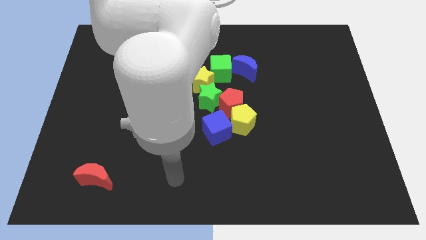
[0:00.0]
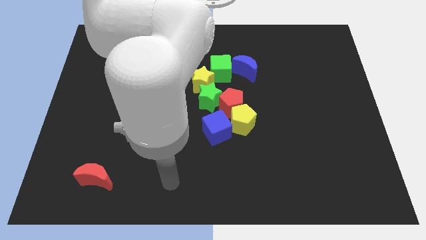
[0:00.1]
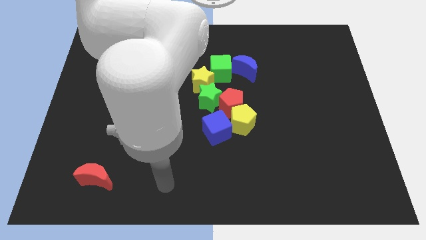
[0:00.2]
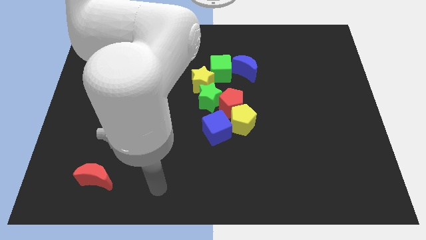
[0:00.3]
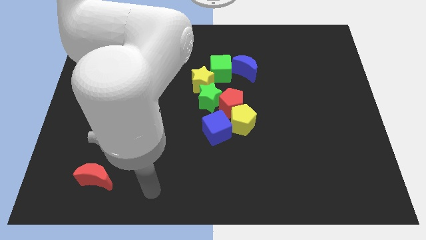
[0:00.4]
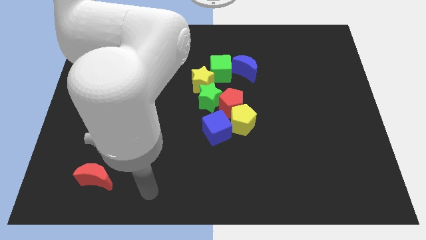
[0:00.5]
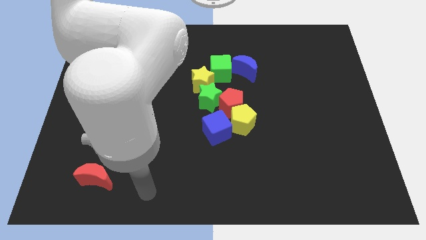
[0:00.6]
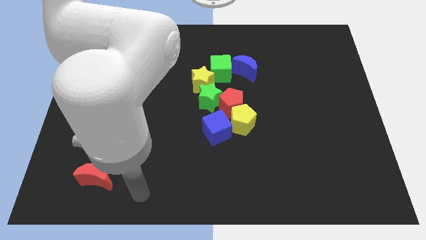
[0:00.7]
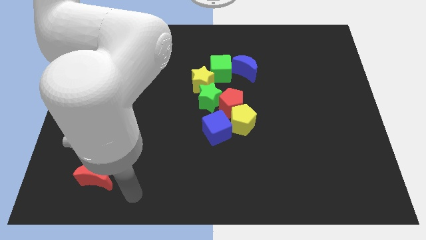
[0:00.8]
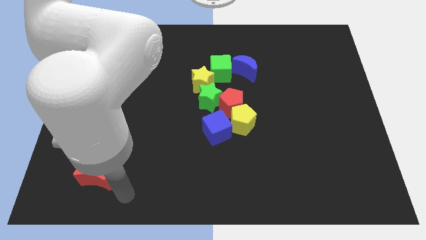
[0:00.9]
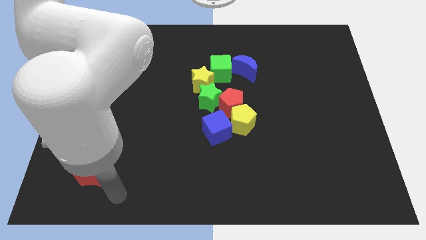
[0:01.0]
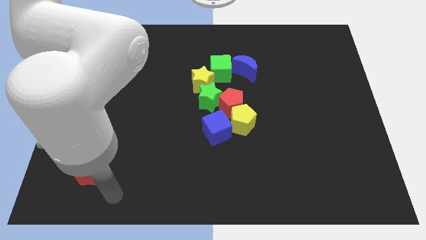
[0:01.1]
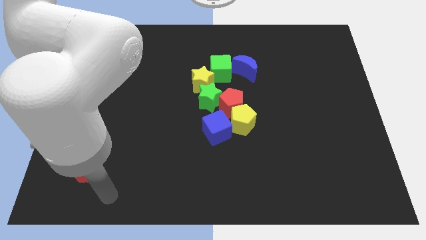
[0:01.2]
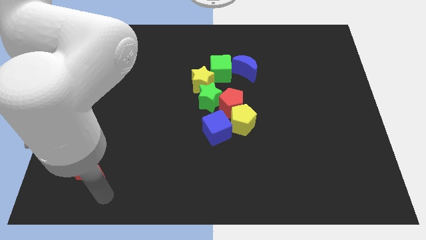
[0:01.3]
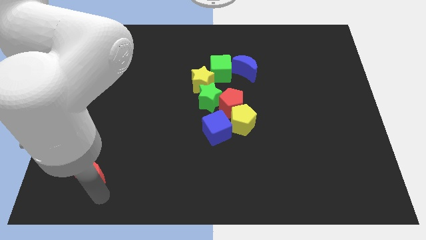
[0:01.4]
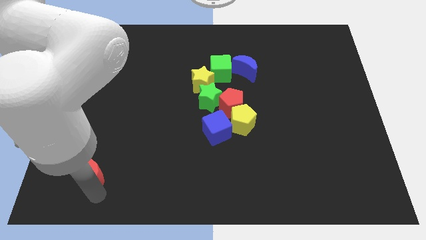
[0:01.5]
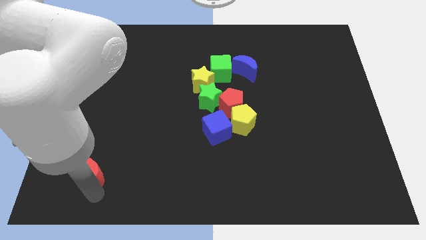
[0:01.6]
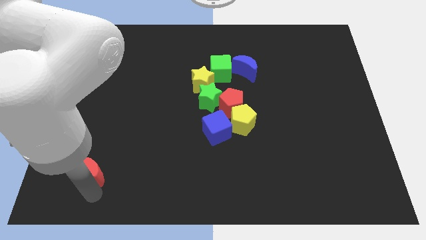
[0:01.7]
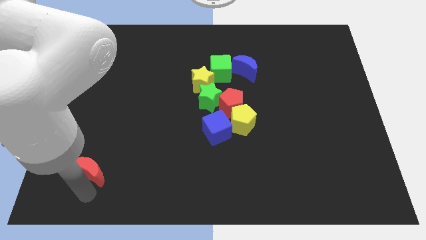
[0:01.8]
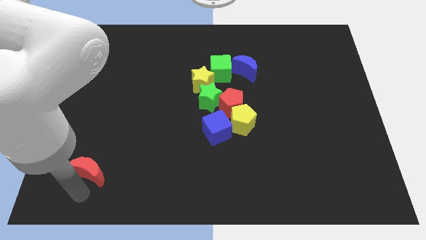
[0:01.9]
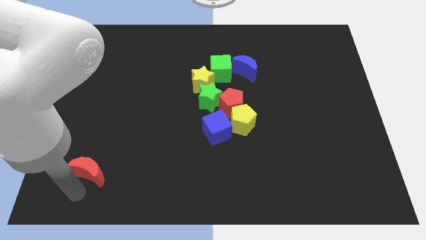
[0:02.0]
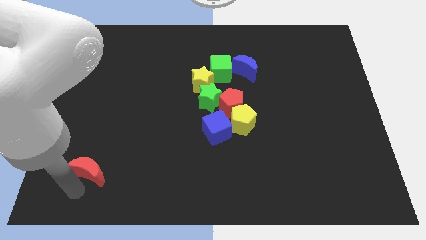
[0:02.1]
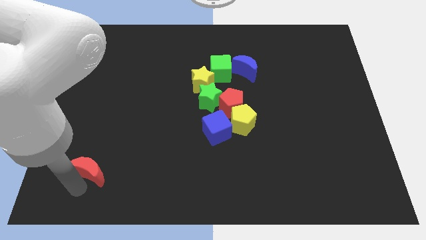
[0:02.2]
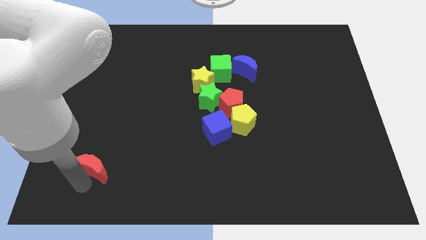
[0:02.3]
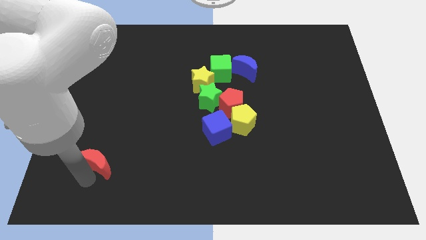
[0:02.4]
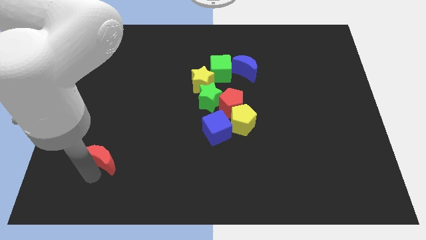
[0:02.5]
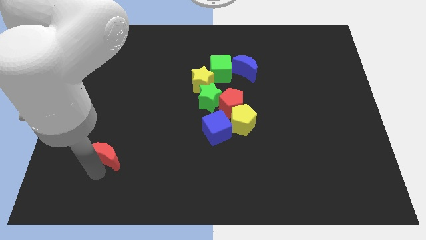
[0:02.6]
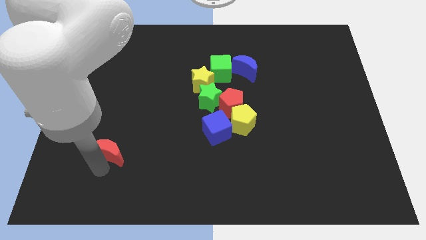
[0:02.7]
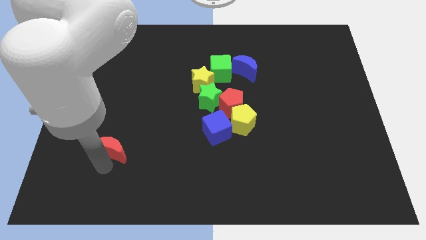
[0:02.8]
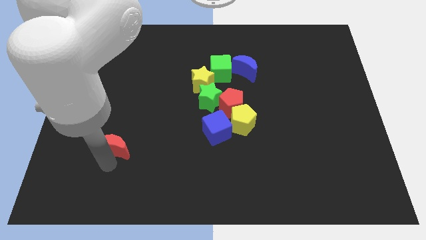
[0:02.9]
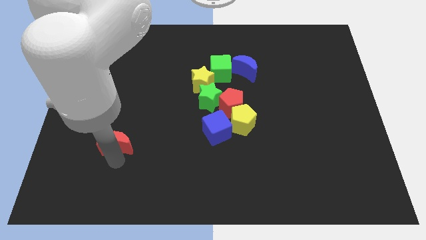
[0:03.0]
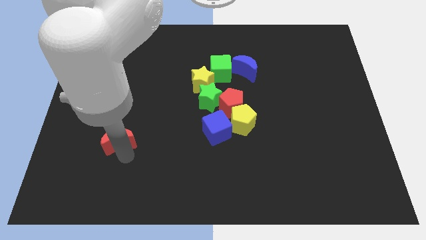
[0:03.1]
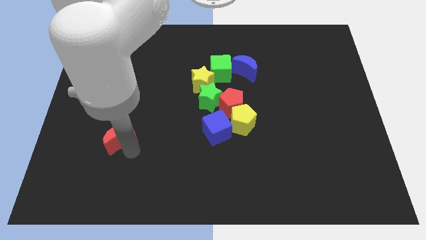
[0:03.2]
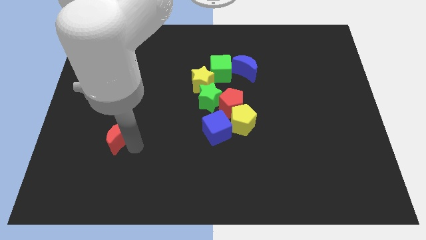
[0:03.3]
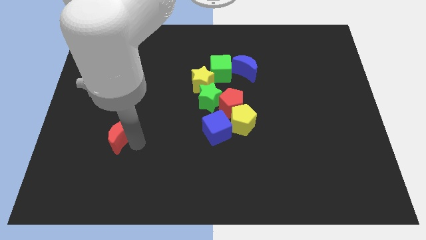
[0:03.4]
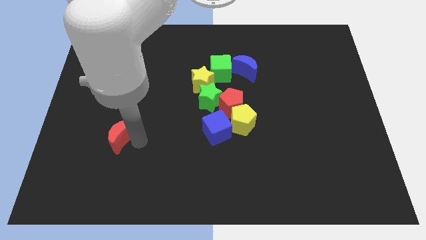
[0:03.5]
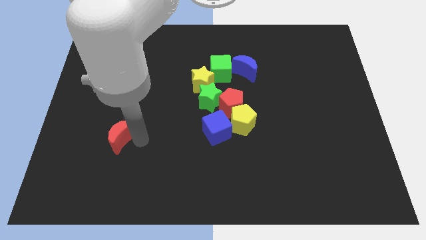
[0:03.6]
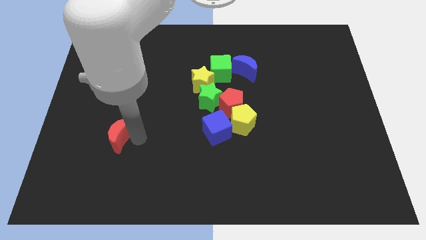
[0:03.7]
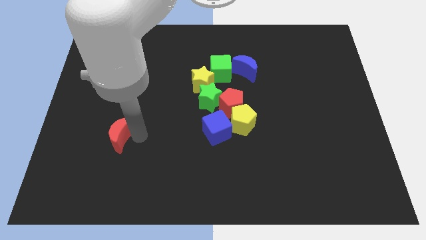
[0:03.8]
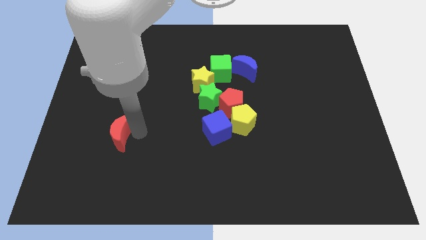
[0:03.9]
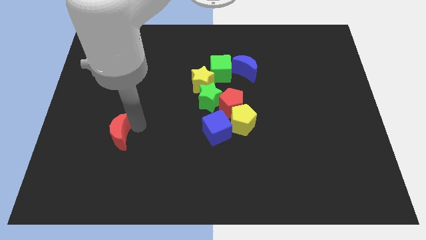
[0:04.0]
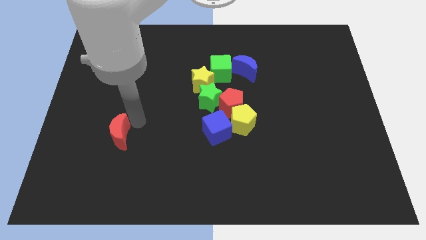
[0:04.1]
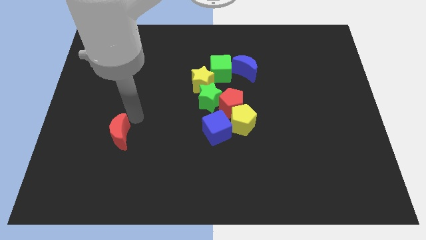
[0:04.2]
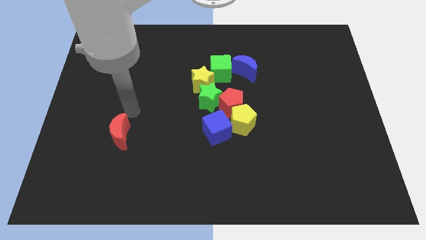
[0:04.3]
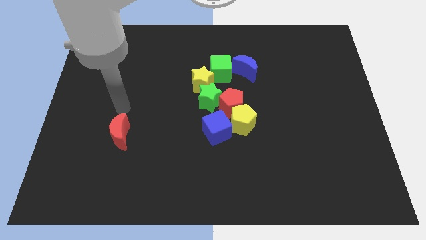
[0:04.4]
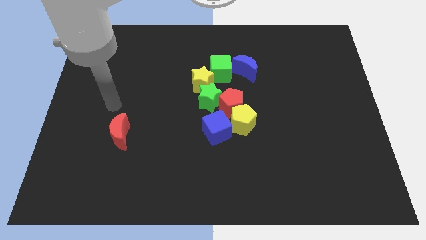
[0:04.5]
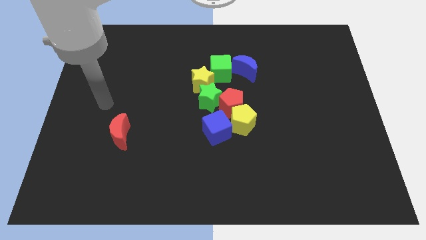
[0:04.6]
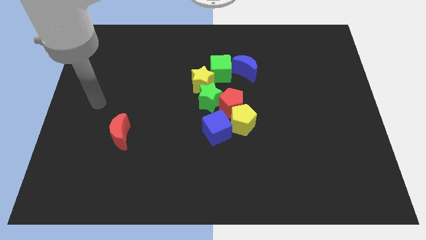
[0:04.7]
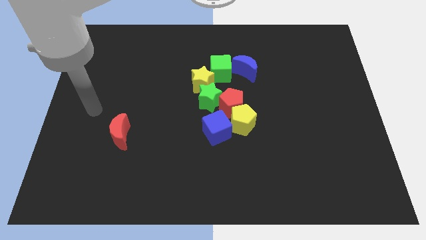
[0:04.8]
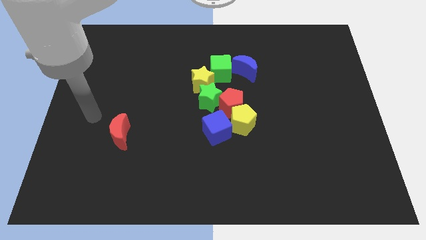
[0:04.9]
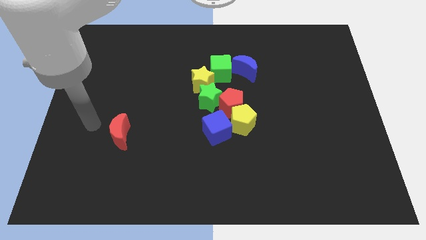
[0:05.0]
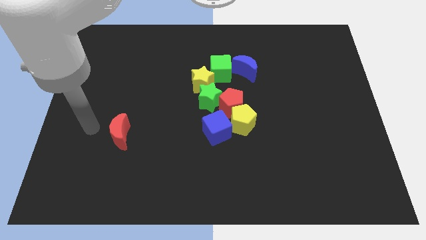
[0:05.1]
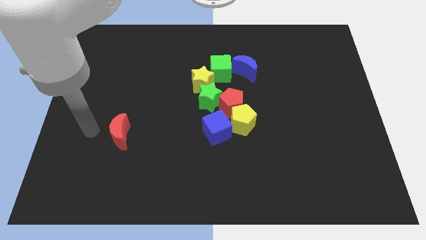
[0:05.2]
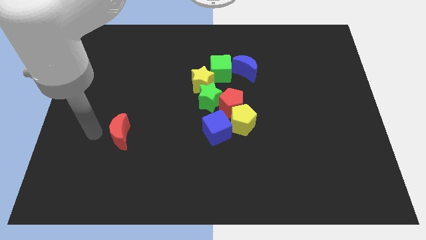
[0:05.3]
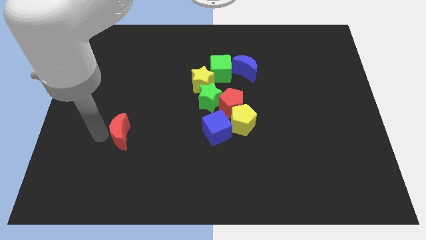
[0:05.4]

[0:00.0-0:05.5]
move the red crescent towards the left side of the blue cube

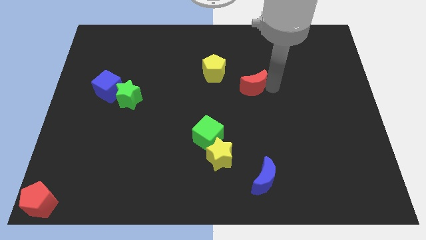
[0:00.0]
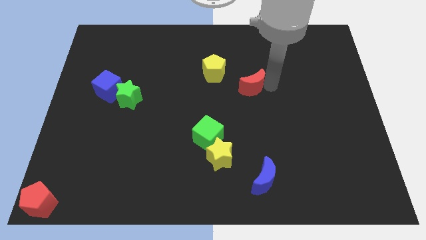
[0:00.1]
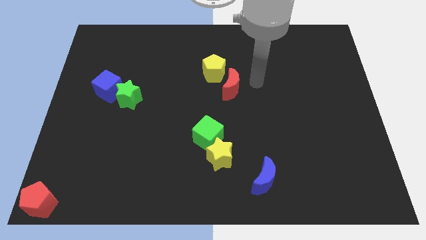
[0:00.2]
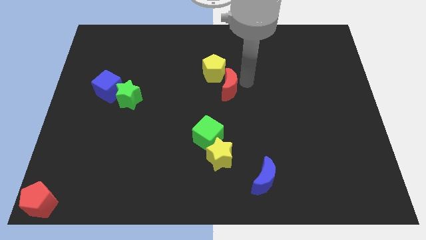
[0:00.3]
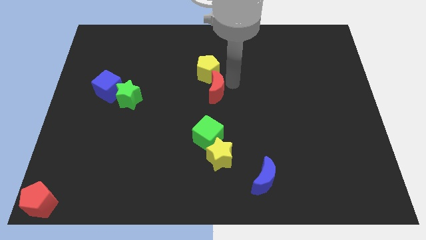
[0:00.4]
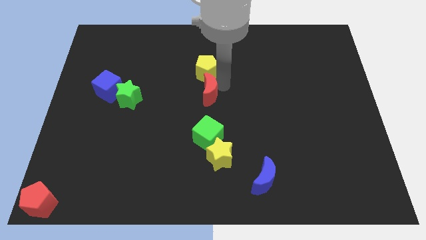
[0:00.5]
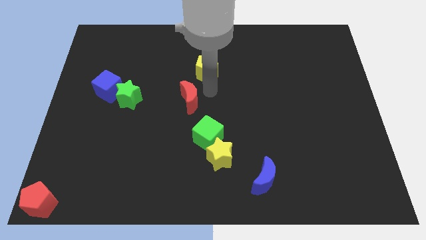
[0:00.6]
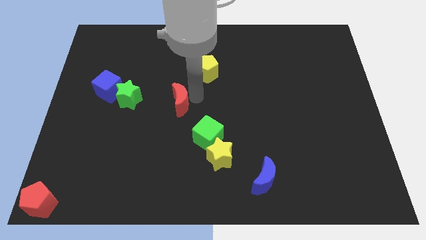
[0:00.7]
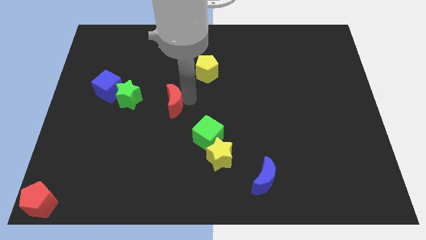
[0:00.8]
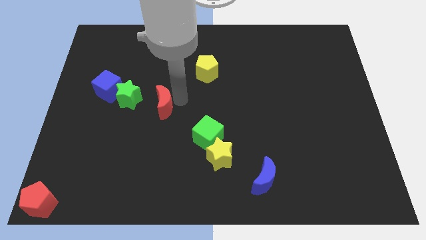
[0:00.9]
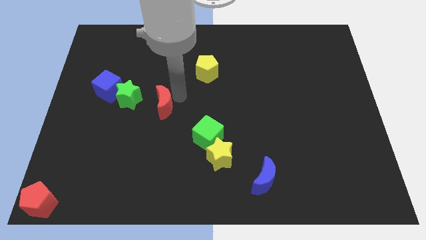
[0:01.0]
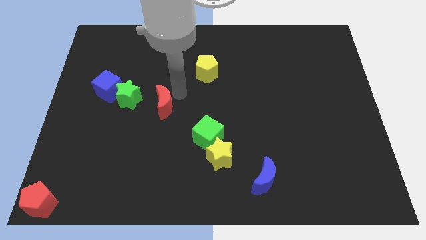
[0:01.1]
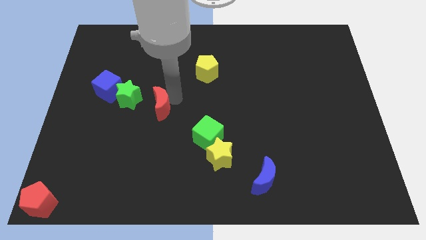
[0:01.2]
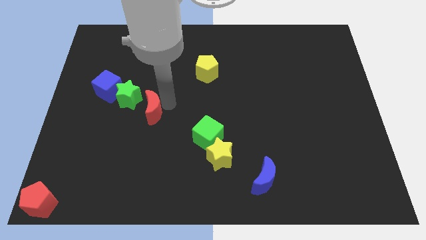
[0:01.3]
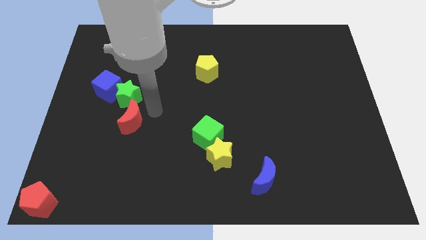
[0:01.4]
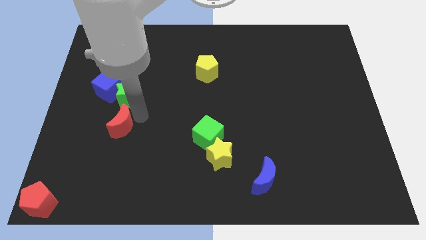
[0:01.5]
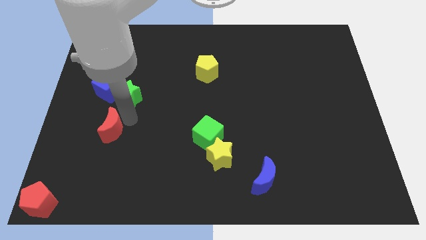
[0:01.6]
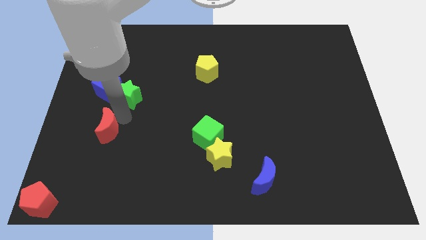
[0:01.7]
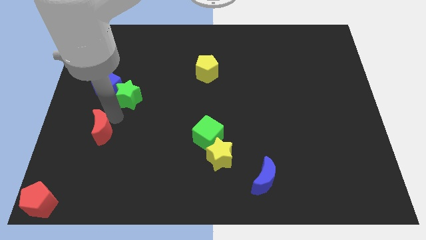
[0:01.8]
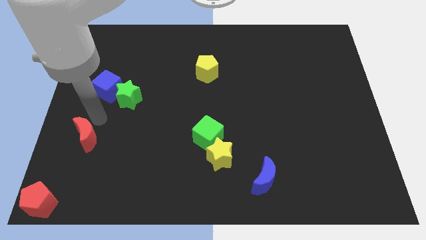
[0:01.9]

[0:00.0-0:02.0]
drag the red crescent towards the left center

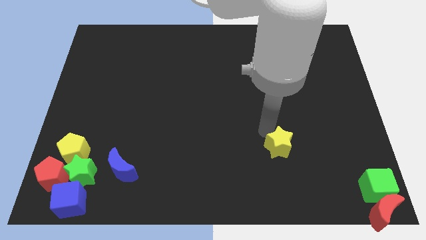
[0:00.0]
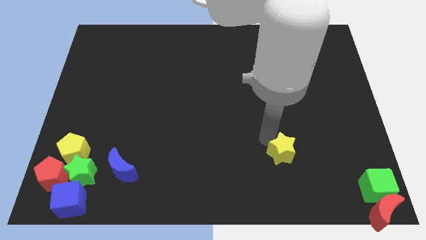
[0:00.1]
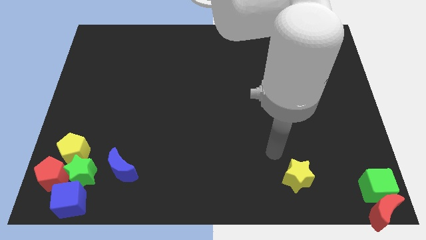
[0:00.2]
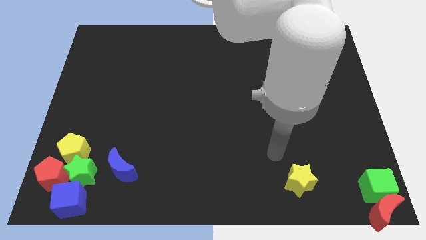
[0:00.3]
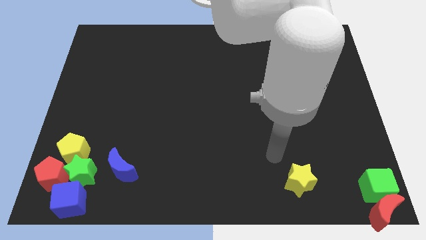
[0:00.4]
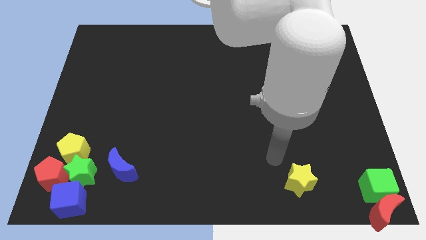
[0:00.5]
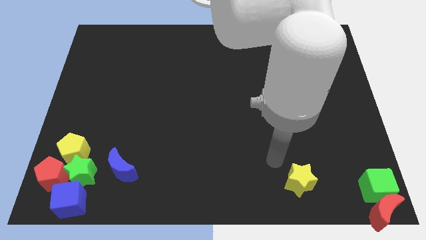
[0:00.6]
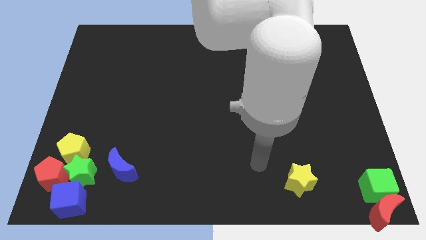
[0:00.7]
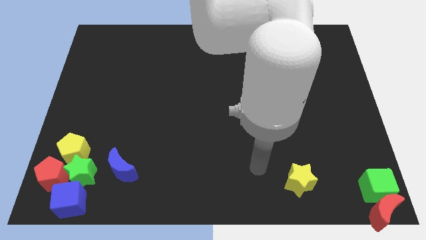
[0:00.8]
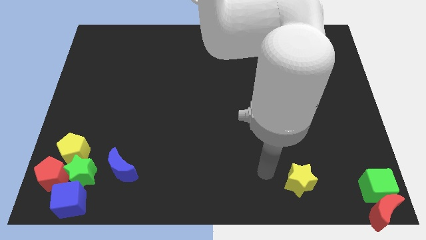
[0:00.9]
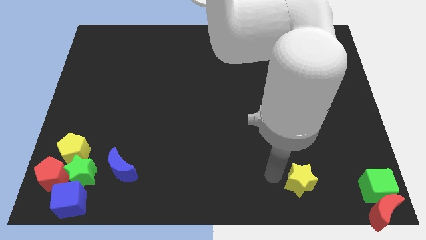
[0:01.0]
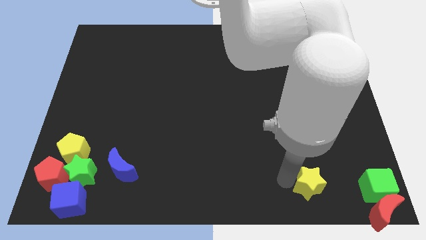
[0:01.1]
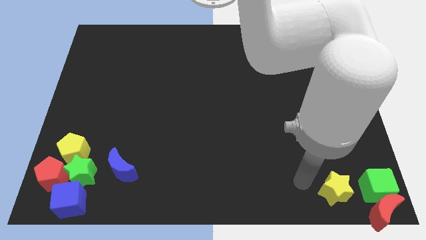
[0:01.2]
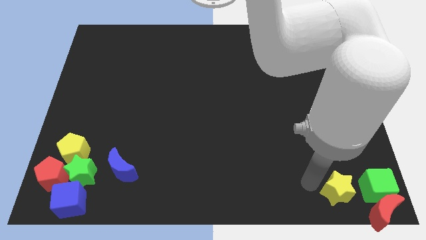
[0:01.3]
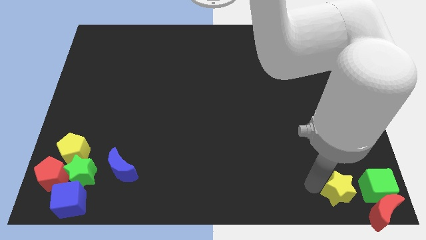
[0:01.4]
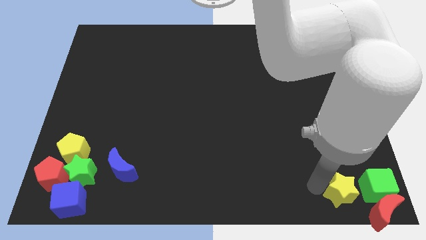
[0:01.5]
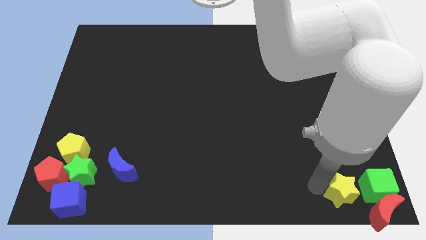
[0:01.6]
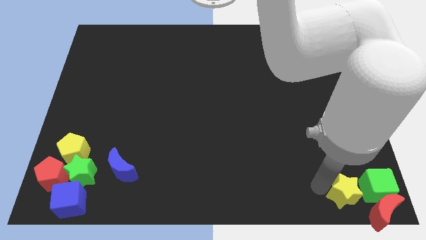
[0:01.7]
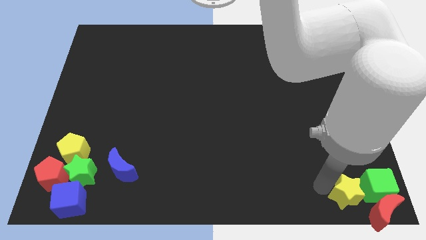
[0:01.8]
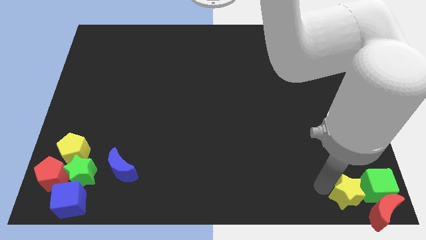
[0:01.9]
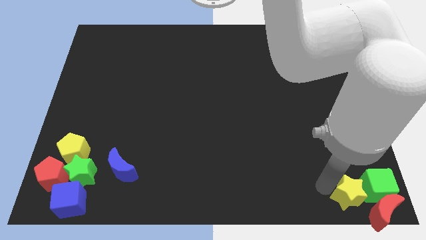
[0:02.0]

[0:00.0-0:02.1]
place yellow star to the left of green cube
